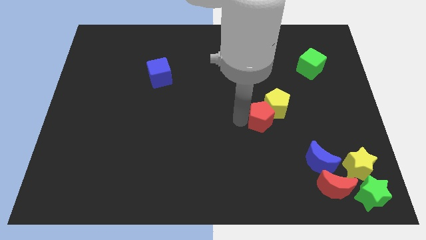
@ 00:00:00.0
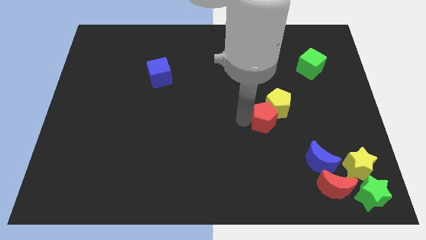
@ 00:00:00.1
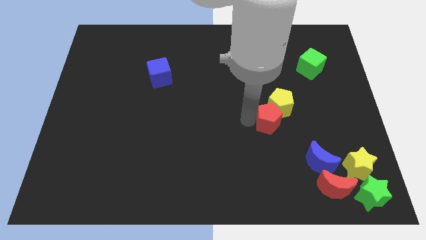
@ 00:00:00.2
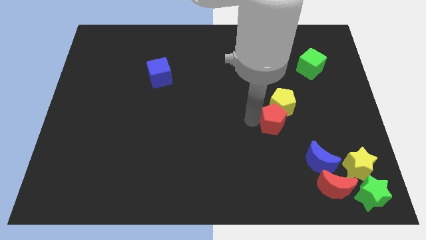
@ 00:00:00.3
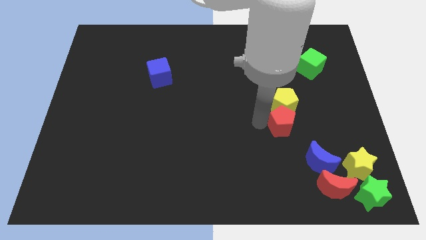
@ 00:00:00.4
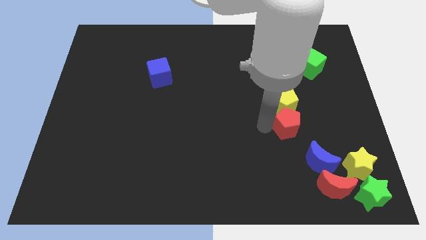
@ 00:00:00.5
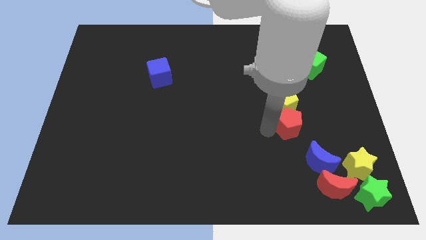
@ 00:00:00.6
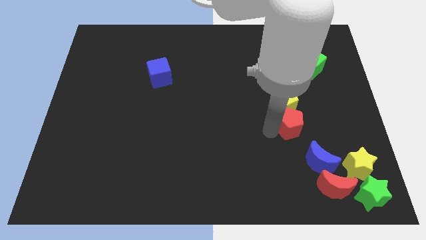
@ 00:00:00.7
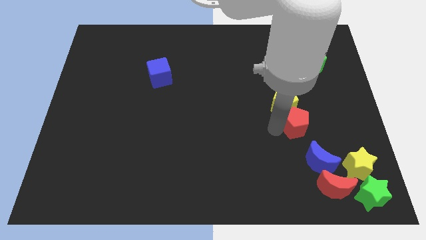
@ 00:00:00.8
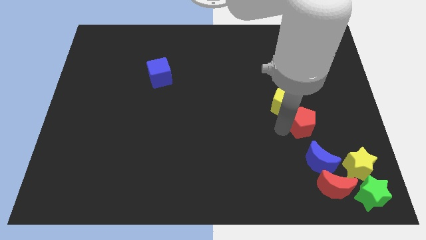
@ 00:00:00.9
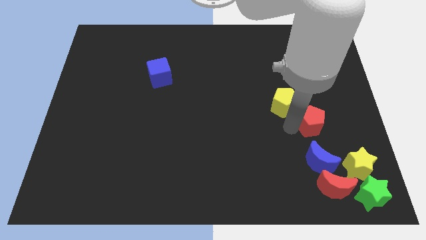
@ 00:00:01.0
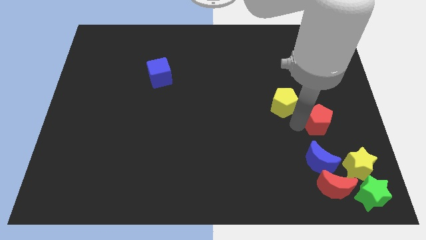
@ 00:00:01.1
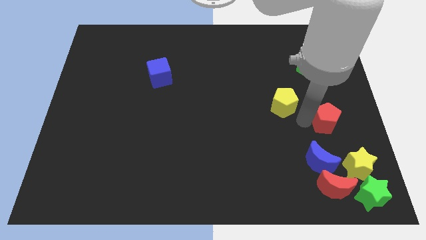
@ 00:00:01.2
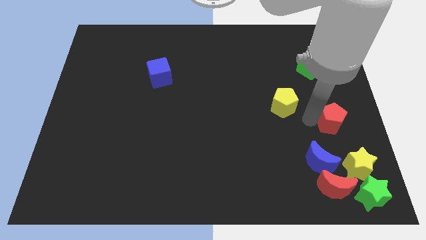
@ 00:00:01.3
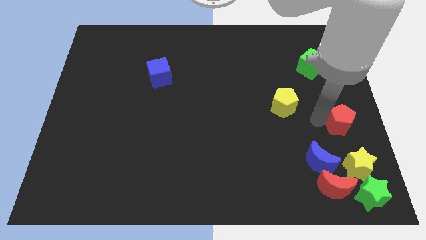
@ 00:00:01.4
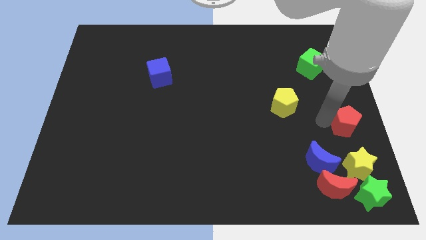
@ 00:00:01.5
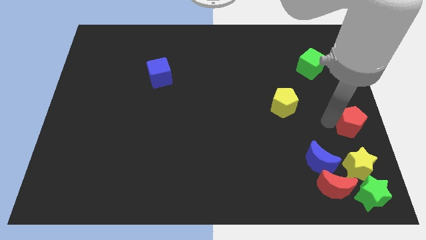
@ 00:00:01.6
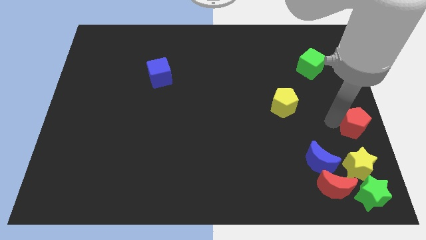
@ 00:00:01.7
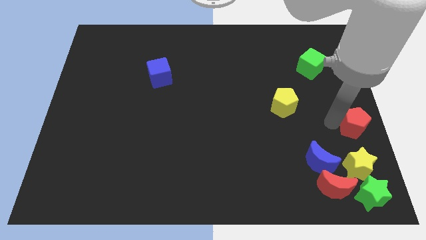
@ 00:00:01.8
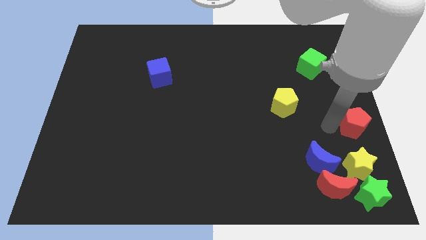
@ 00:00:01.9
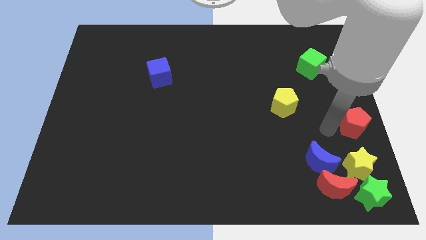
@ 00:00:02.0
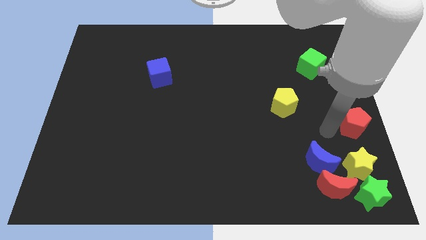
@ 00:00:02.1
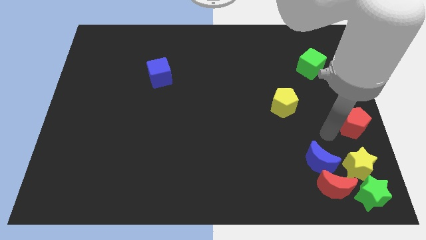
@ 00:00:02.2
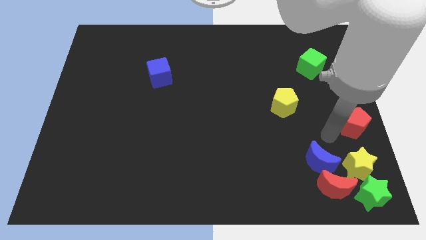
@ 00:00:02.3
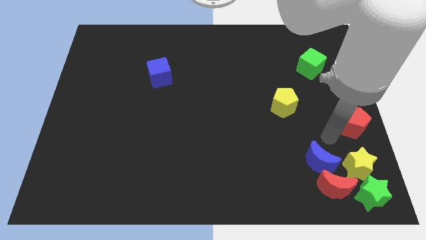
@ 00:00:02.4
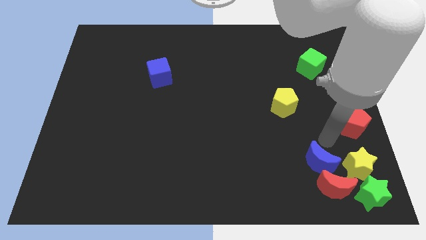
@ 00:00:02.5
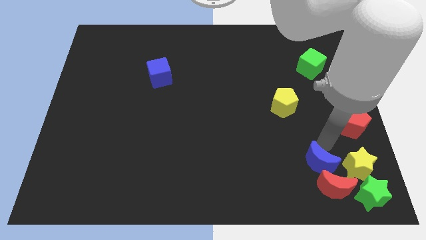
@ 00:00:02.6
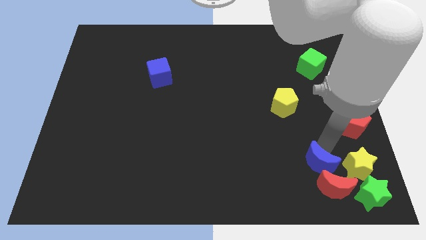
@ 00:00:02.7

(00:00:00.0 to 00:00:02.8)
move the red pentagon to the top of the yellow star

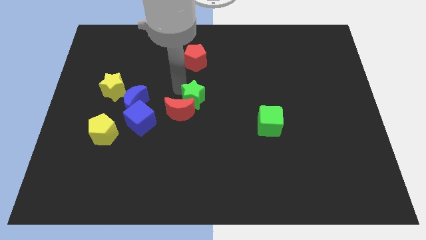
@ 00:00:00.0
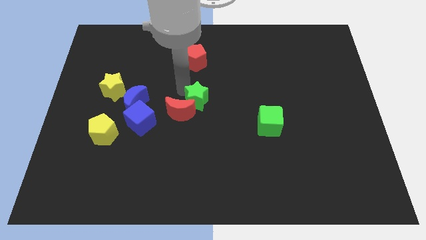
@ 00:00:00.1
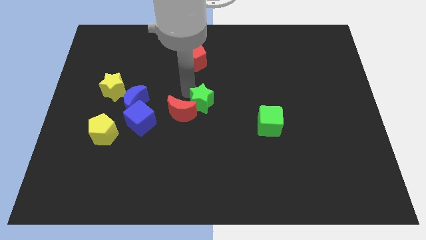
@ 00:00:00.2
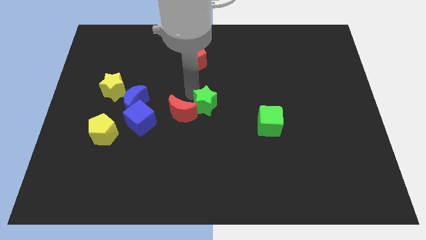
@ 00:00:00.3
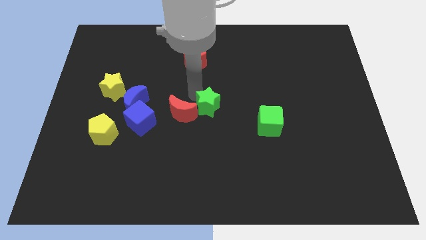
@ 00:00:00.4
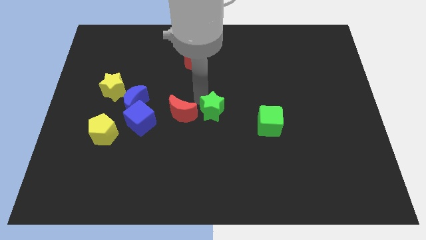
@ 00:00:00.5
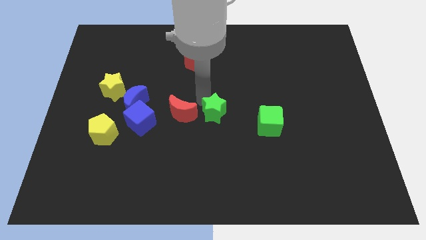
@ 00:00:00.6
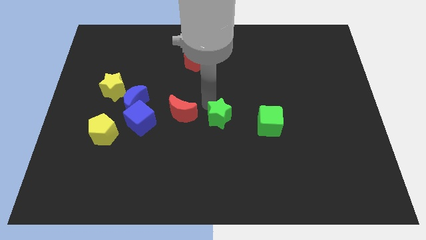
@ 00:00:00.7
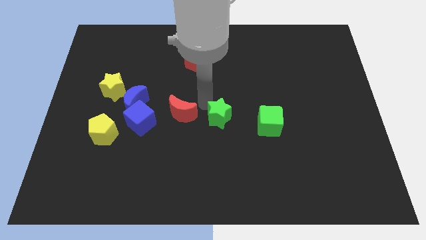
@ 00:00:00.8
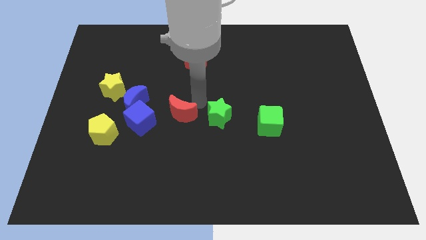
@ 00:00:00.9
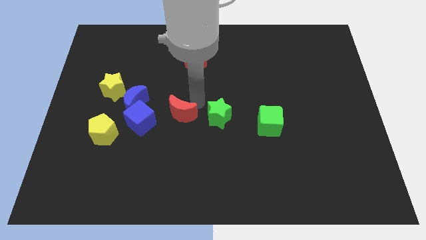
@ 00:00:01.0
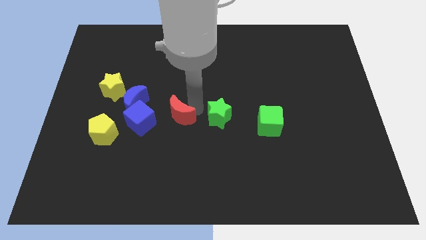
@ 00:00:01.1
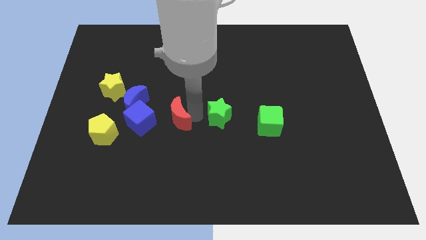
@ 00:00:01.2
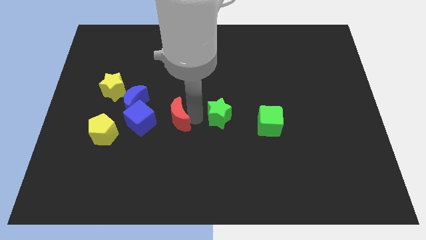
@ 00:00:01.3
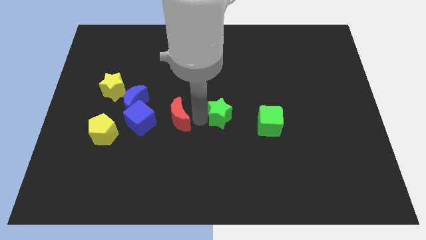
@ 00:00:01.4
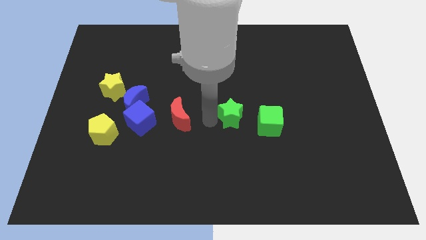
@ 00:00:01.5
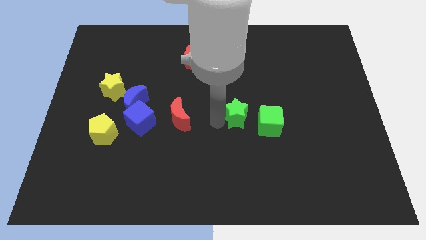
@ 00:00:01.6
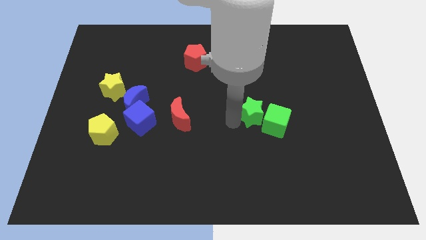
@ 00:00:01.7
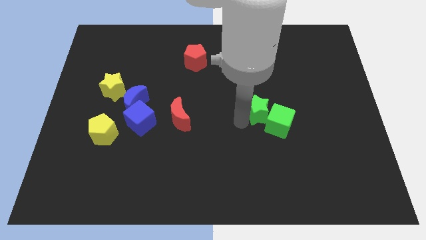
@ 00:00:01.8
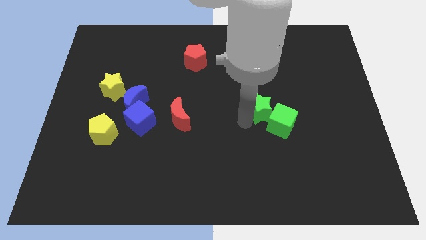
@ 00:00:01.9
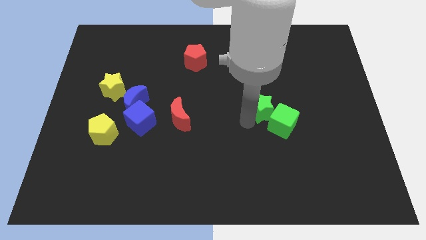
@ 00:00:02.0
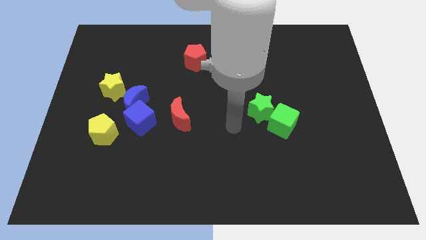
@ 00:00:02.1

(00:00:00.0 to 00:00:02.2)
move the green star to the left og the green cube

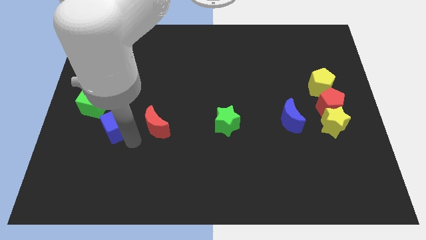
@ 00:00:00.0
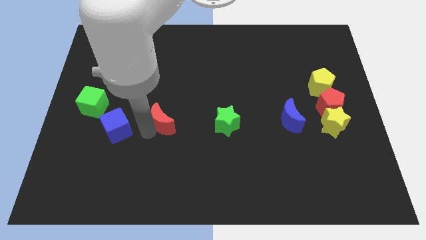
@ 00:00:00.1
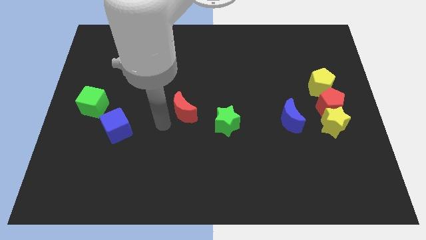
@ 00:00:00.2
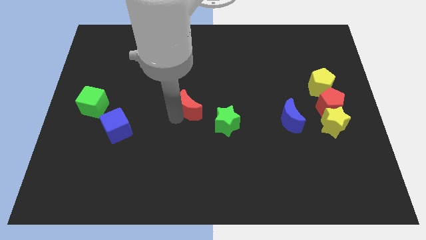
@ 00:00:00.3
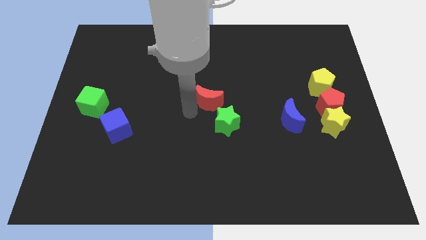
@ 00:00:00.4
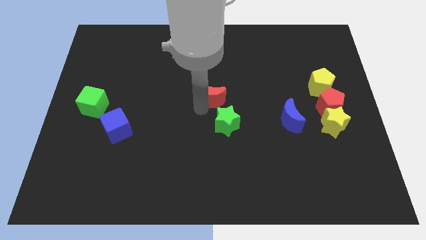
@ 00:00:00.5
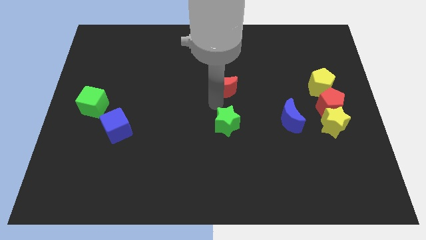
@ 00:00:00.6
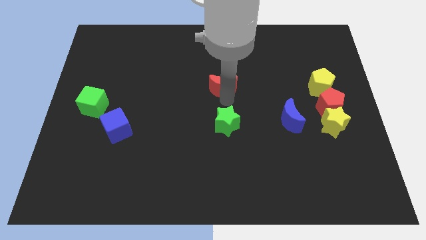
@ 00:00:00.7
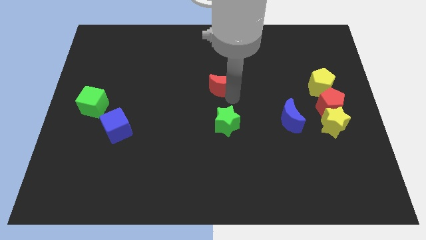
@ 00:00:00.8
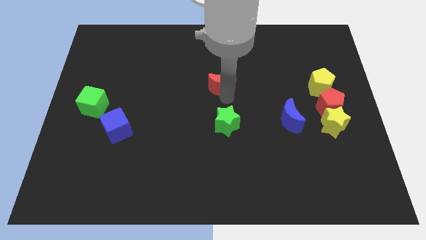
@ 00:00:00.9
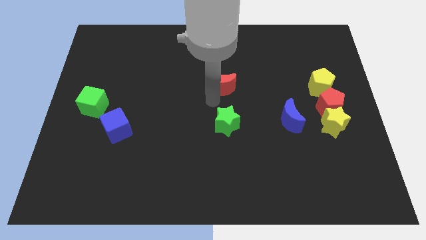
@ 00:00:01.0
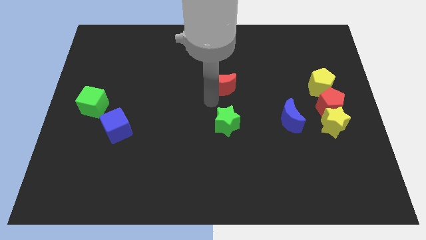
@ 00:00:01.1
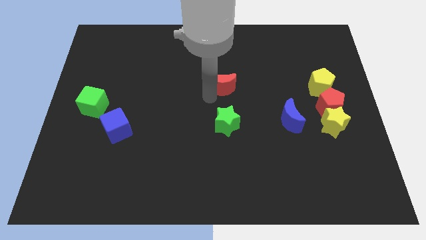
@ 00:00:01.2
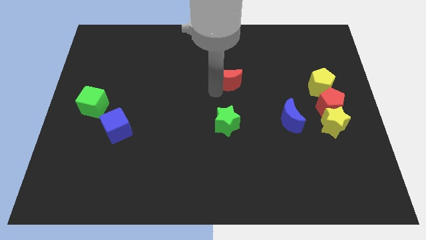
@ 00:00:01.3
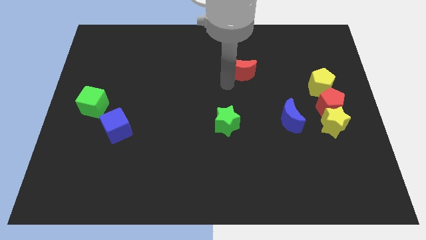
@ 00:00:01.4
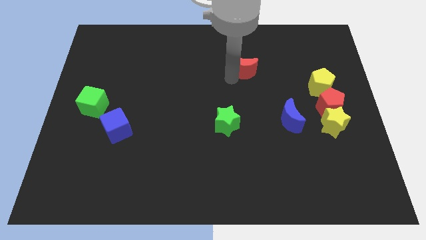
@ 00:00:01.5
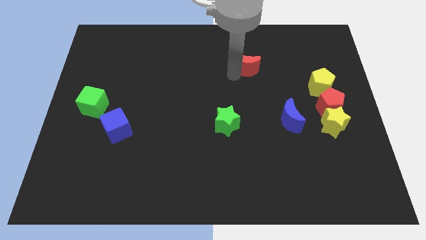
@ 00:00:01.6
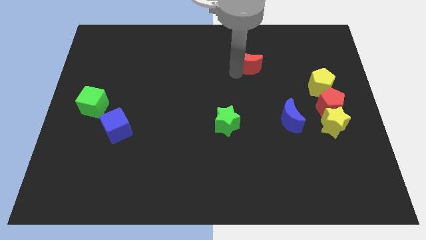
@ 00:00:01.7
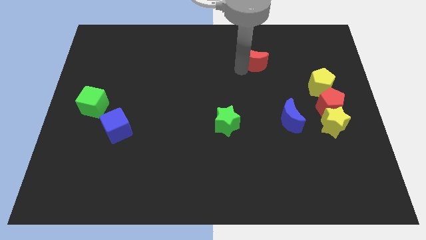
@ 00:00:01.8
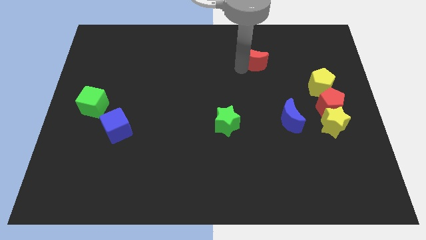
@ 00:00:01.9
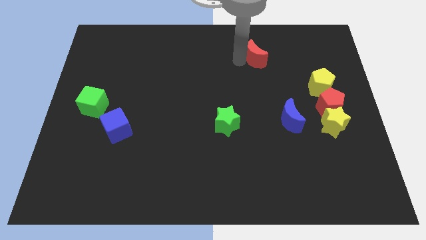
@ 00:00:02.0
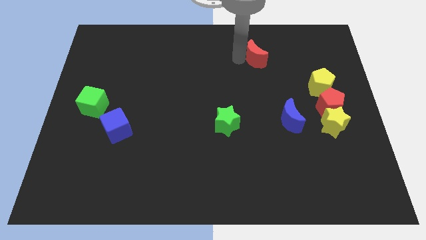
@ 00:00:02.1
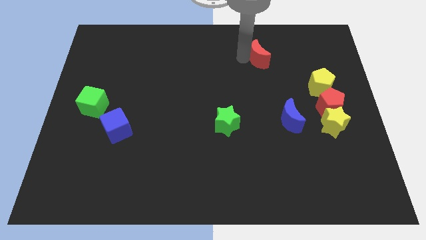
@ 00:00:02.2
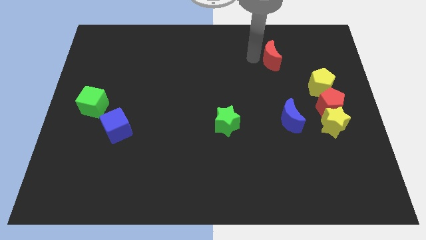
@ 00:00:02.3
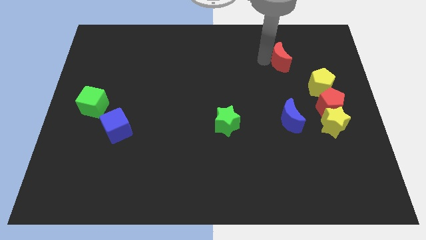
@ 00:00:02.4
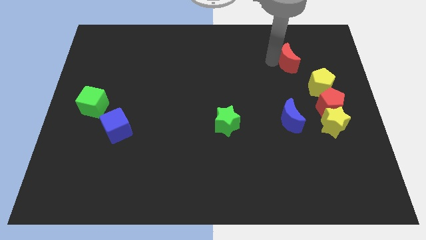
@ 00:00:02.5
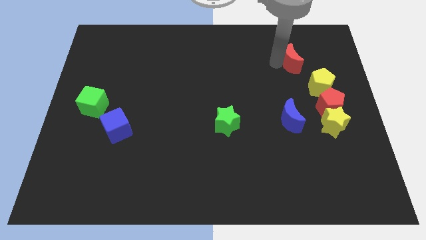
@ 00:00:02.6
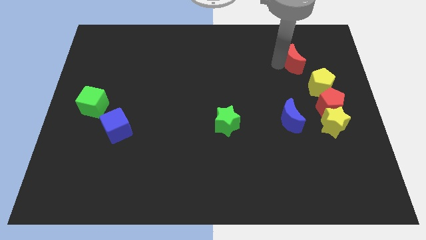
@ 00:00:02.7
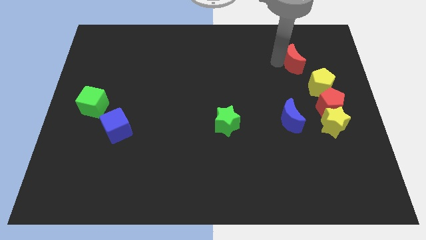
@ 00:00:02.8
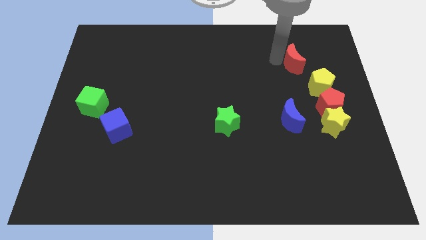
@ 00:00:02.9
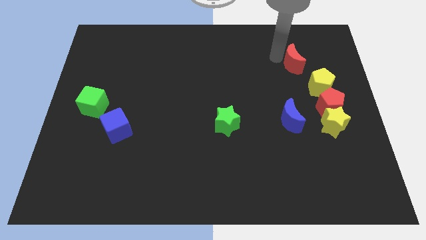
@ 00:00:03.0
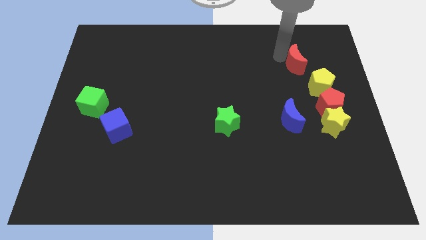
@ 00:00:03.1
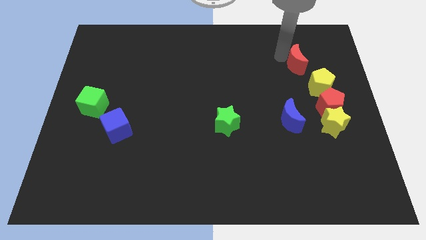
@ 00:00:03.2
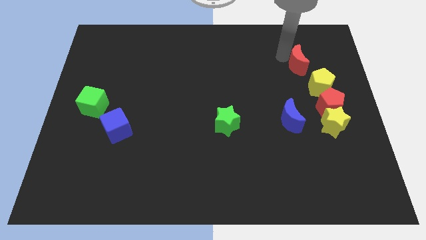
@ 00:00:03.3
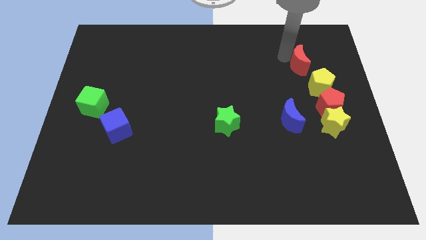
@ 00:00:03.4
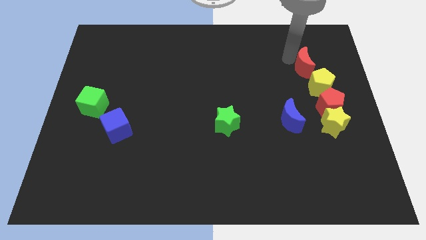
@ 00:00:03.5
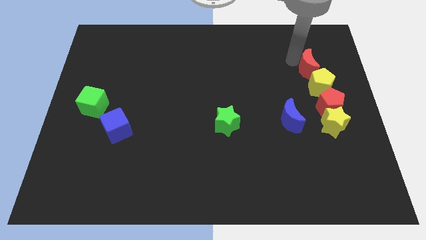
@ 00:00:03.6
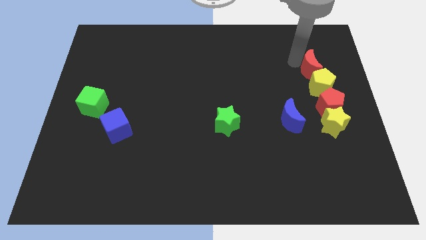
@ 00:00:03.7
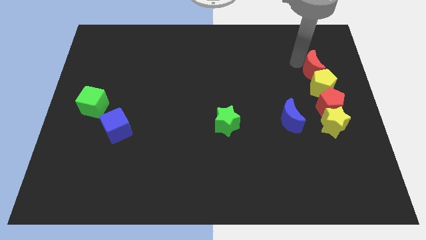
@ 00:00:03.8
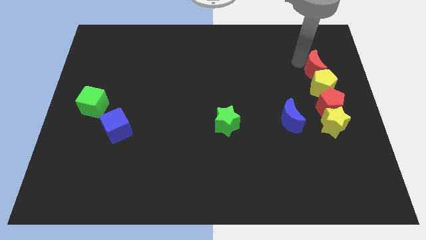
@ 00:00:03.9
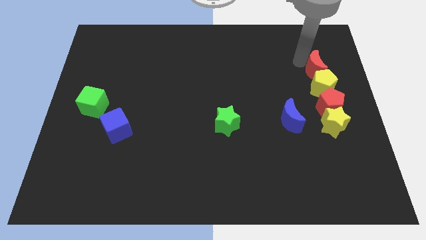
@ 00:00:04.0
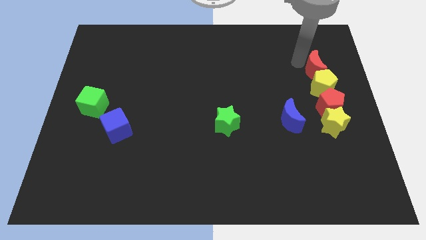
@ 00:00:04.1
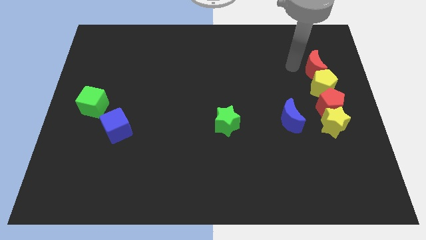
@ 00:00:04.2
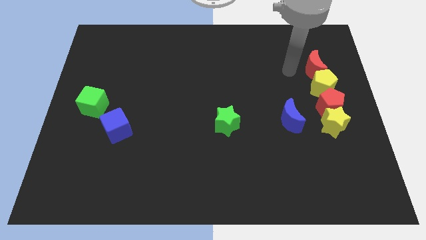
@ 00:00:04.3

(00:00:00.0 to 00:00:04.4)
place the red crescent at the top side of the yellow pentagon
